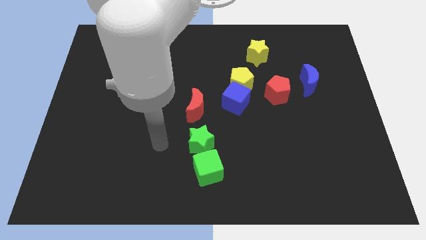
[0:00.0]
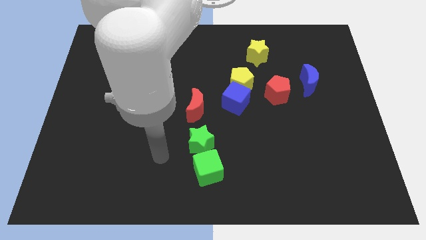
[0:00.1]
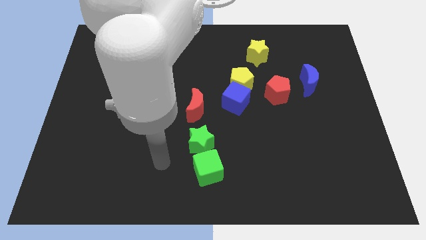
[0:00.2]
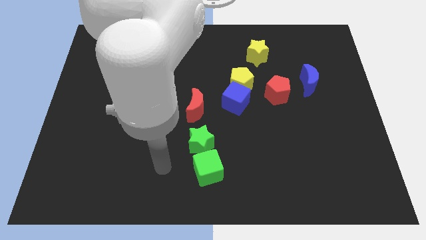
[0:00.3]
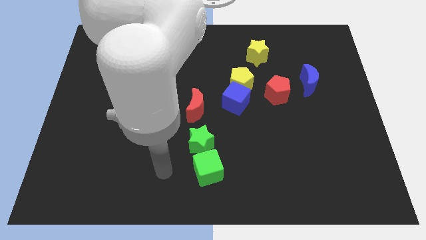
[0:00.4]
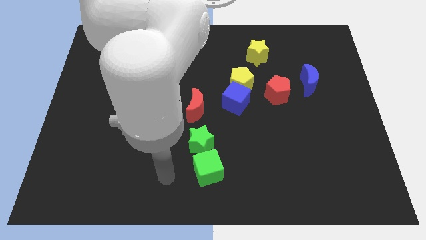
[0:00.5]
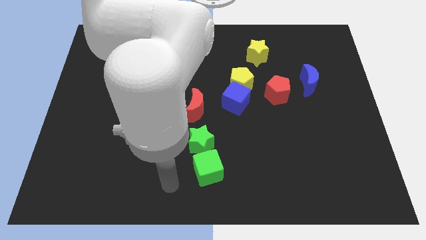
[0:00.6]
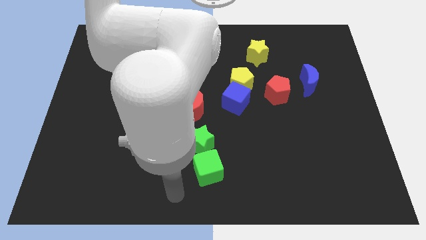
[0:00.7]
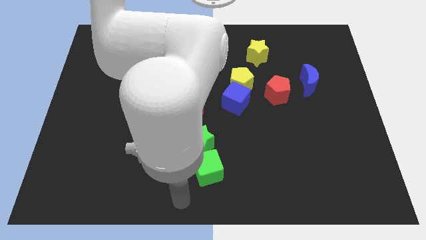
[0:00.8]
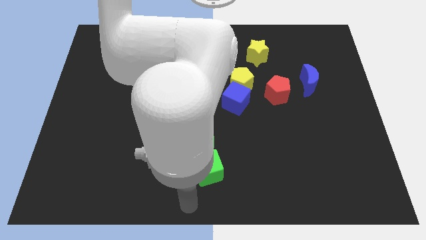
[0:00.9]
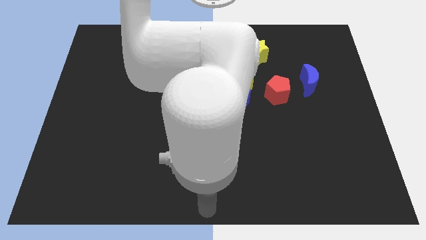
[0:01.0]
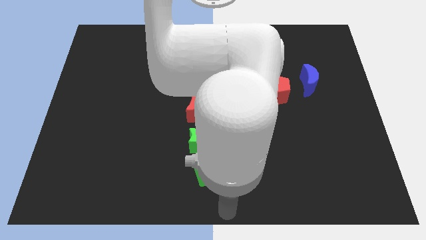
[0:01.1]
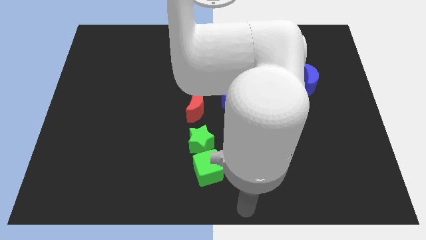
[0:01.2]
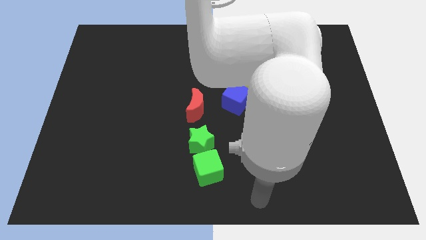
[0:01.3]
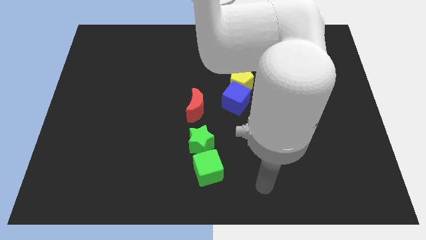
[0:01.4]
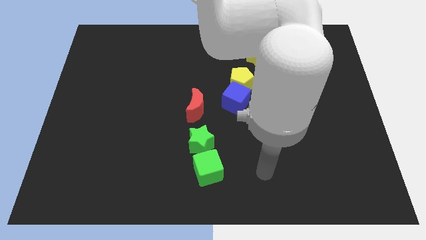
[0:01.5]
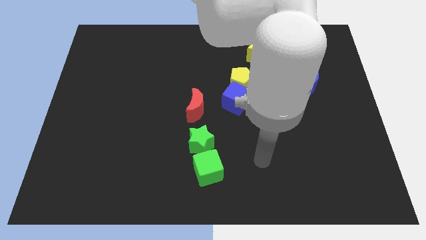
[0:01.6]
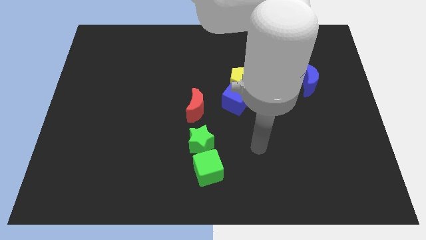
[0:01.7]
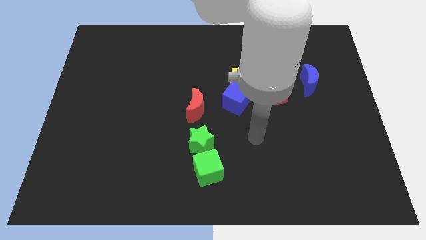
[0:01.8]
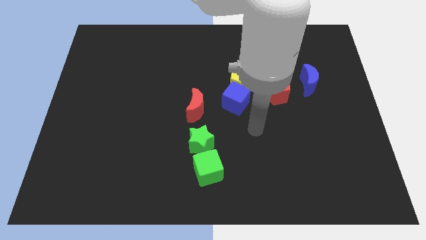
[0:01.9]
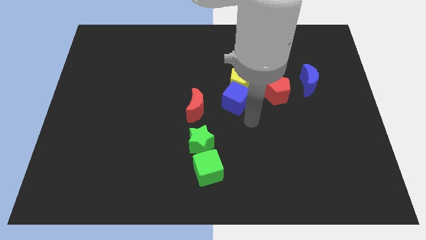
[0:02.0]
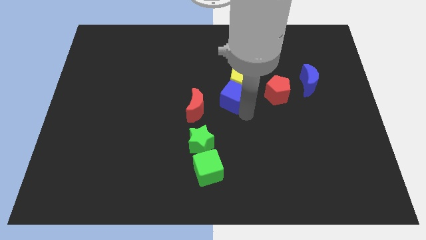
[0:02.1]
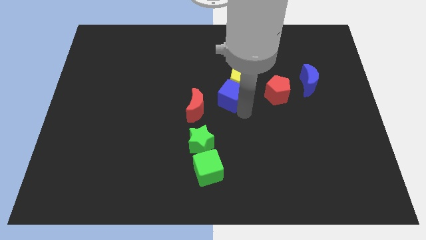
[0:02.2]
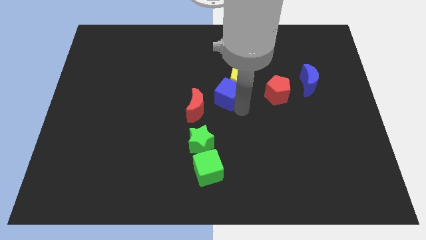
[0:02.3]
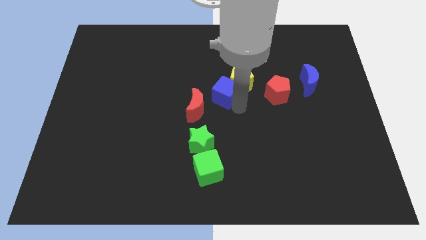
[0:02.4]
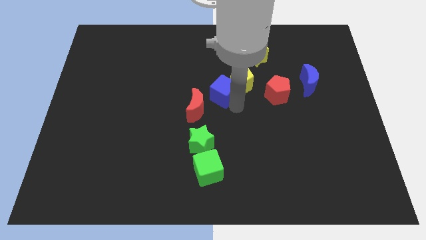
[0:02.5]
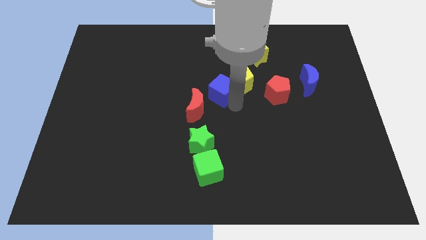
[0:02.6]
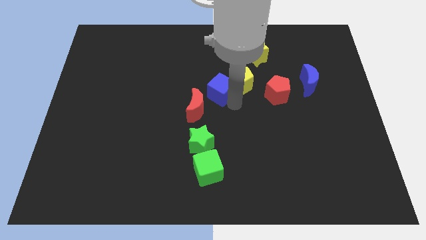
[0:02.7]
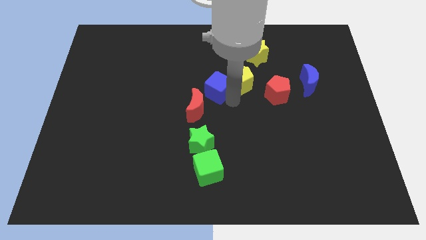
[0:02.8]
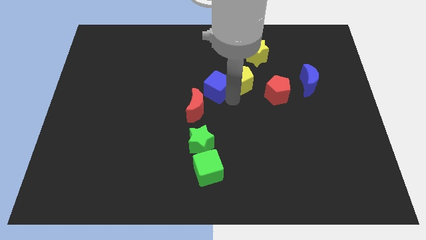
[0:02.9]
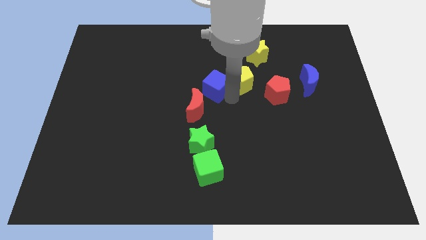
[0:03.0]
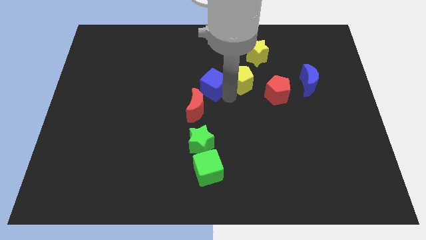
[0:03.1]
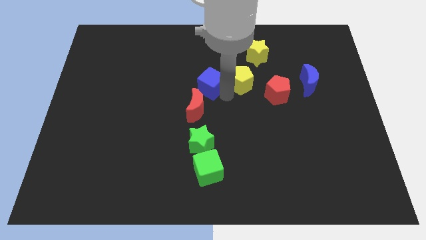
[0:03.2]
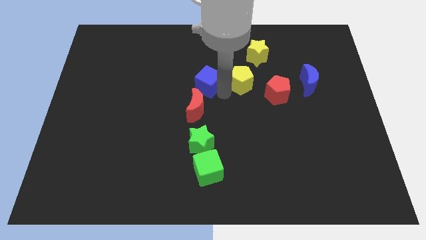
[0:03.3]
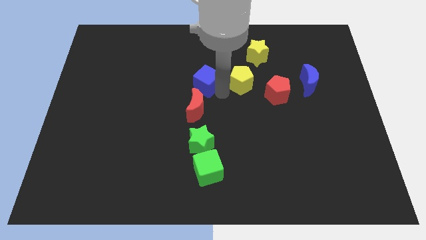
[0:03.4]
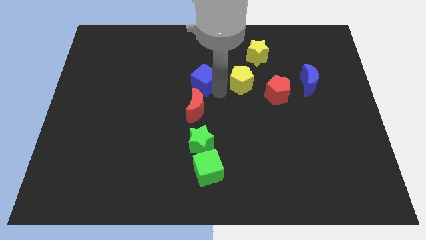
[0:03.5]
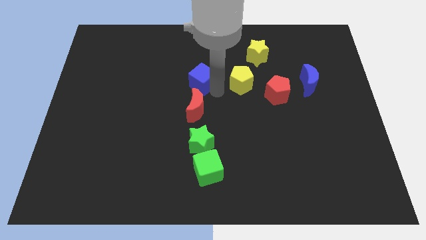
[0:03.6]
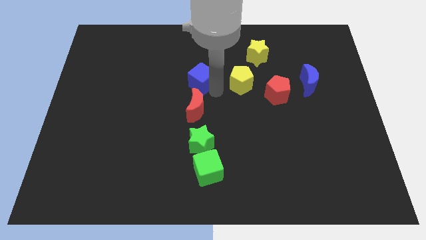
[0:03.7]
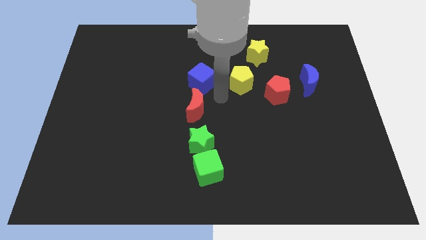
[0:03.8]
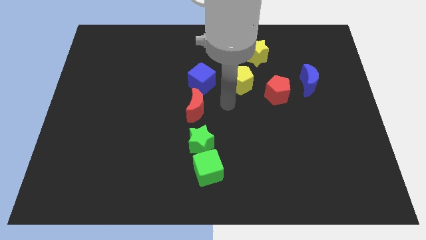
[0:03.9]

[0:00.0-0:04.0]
place the blue cube parallel left to the yellow pentagon

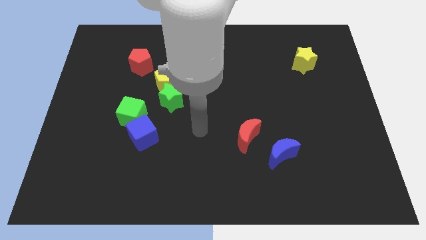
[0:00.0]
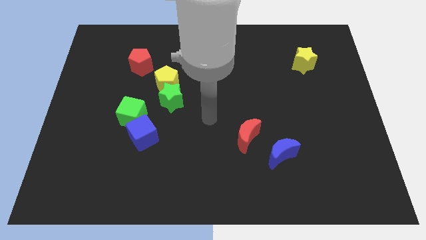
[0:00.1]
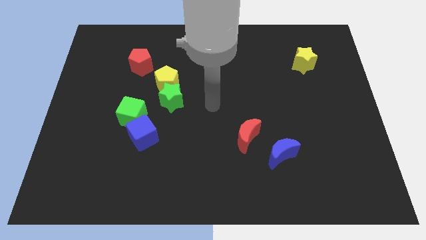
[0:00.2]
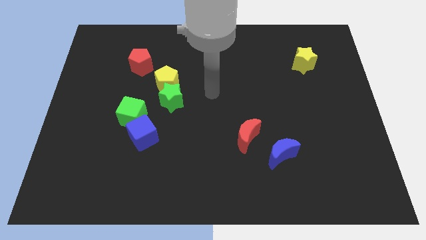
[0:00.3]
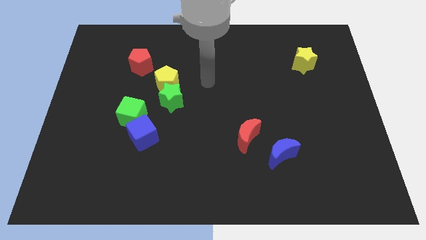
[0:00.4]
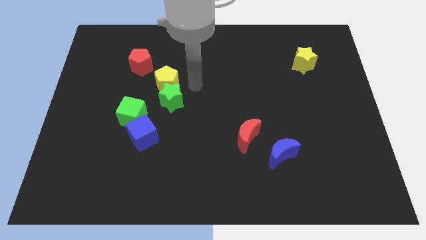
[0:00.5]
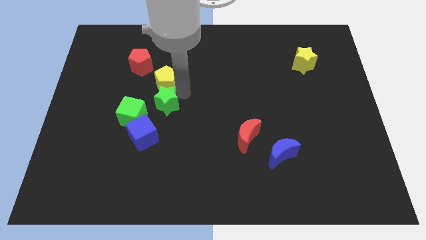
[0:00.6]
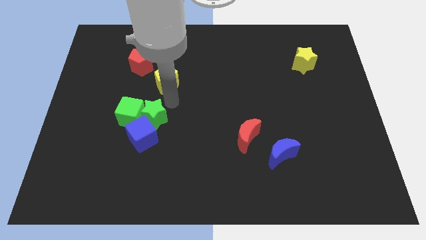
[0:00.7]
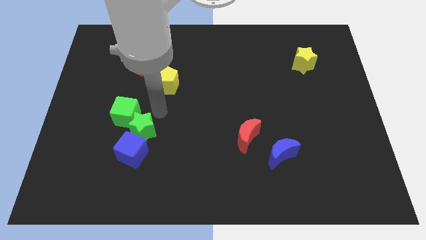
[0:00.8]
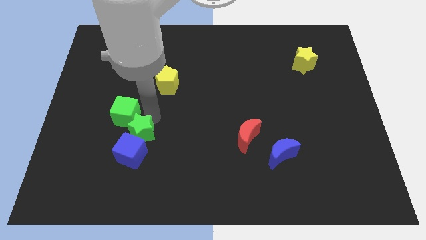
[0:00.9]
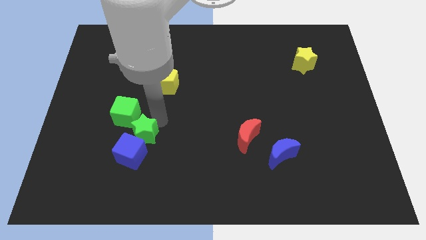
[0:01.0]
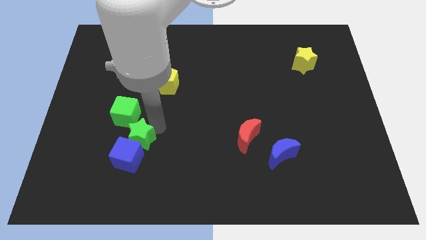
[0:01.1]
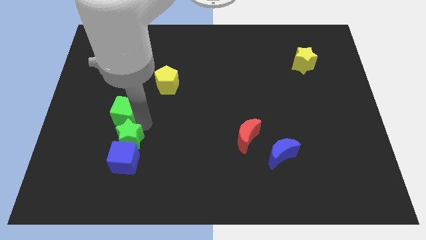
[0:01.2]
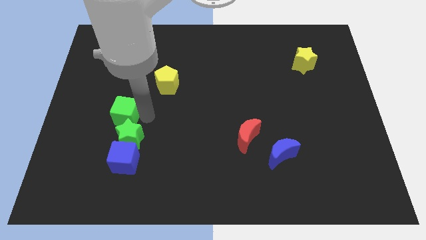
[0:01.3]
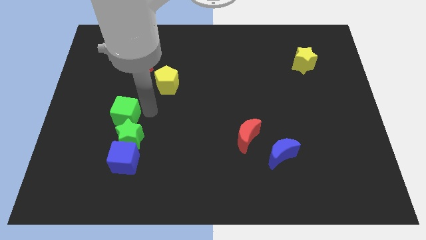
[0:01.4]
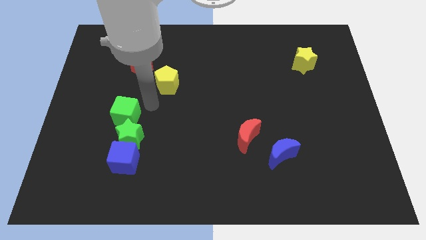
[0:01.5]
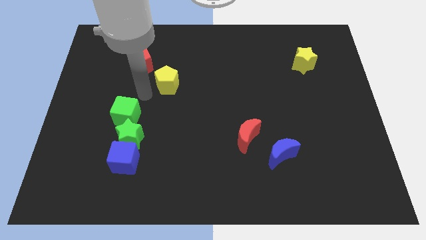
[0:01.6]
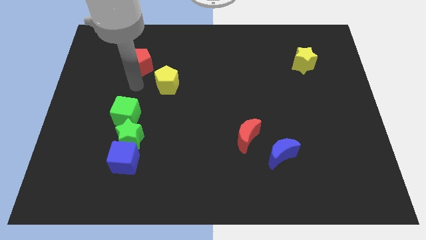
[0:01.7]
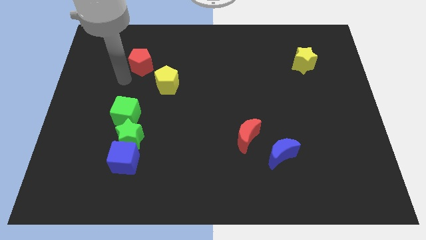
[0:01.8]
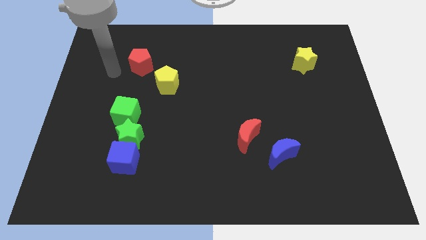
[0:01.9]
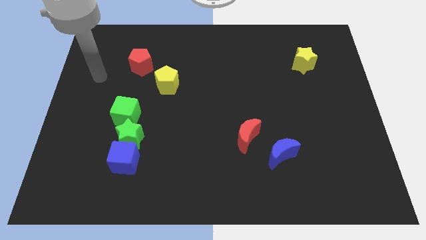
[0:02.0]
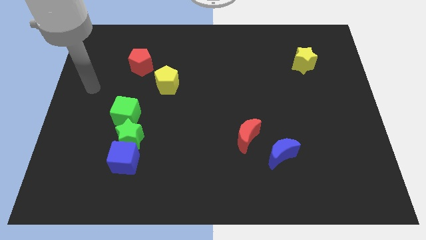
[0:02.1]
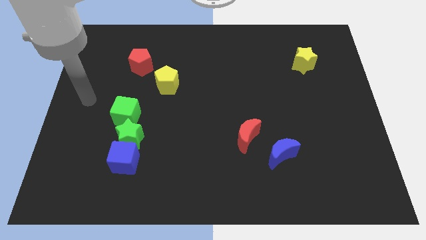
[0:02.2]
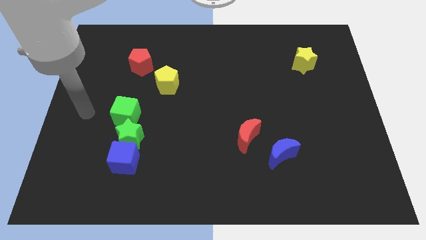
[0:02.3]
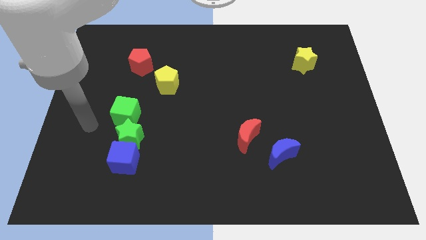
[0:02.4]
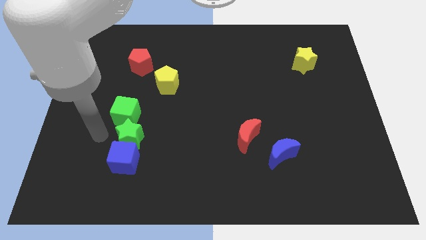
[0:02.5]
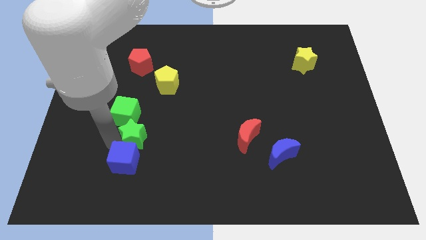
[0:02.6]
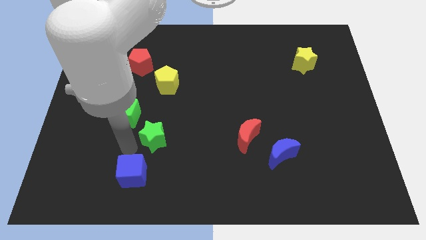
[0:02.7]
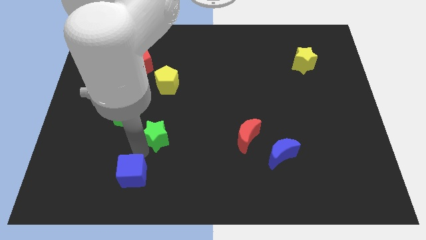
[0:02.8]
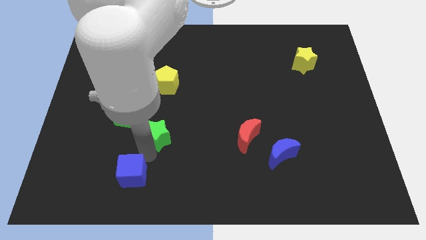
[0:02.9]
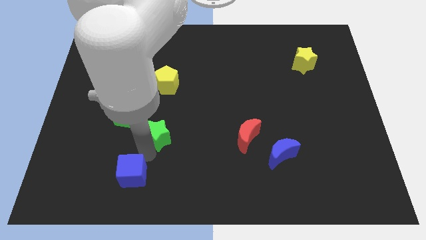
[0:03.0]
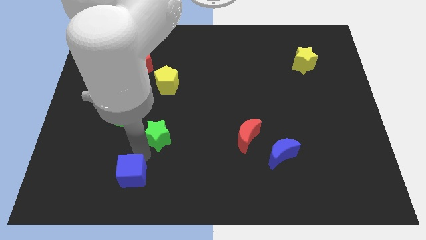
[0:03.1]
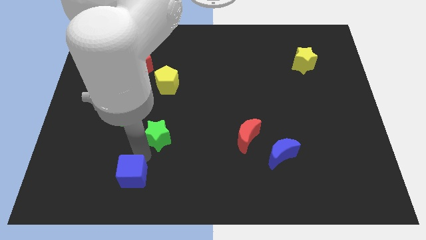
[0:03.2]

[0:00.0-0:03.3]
move the green star to the top right of the blue cube

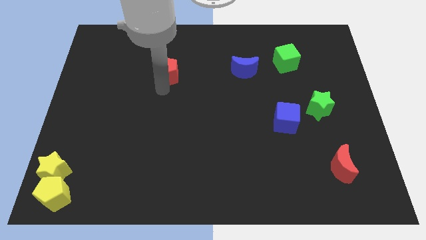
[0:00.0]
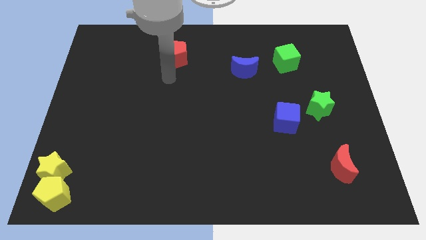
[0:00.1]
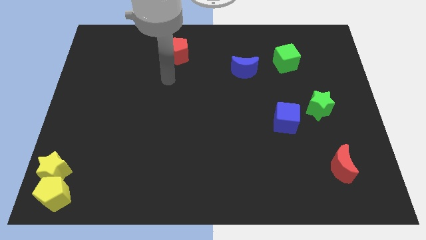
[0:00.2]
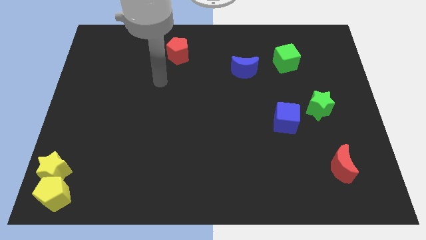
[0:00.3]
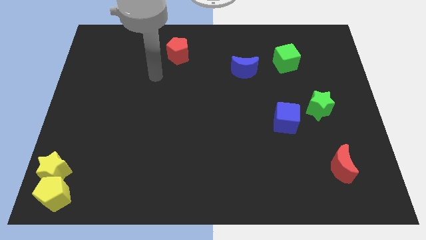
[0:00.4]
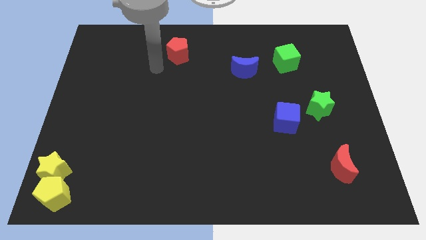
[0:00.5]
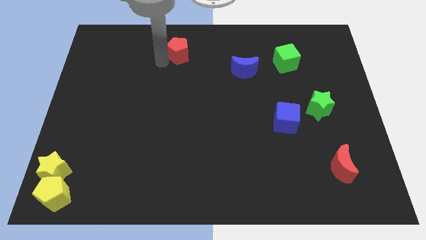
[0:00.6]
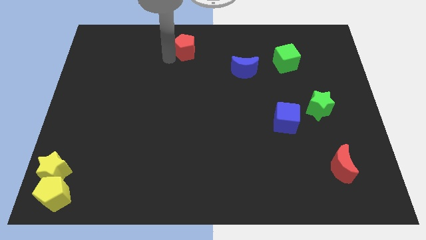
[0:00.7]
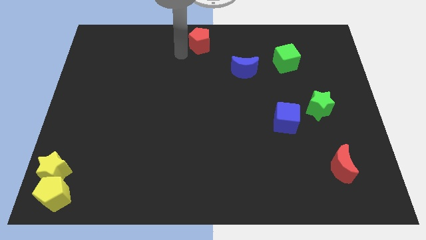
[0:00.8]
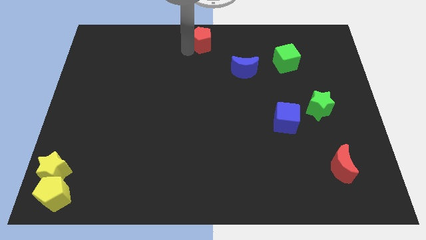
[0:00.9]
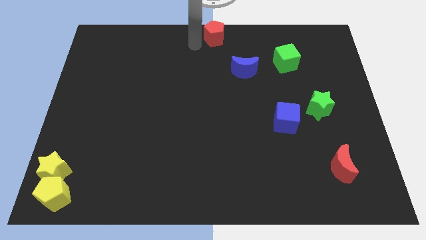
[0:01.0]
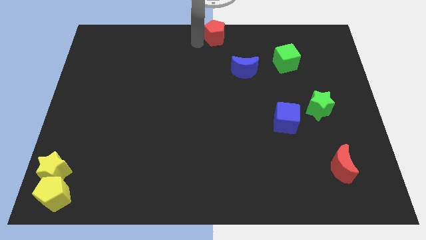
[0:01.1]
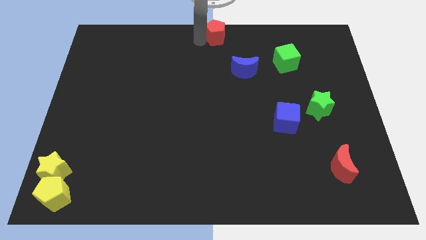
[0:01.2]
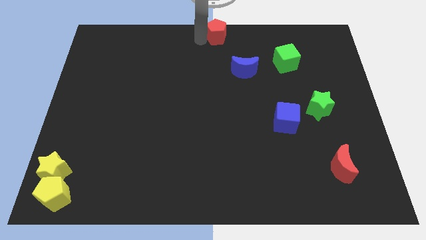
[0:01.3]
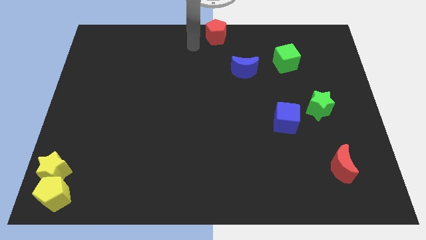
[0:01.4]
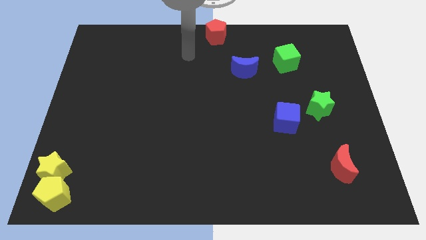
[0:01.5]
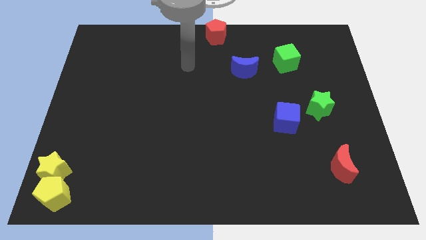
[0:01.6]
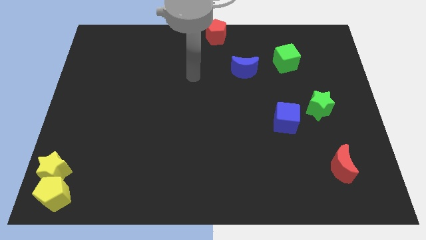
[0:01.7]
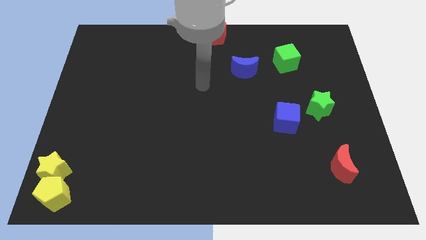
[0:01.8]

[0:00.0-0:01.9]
put the red pentagon at the top center
